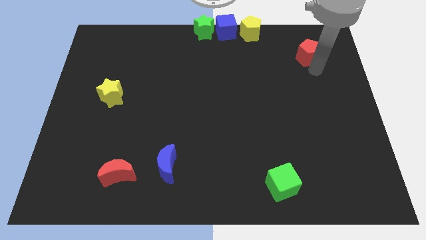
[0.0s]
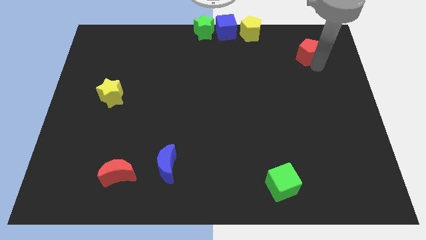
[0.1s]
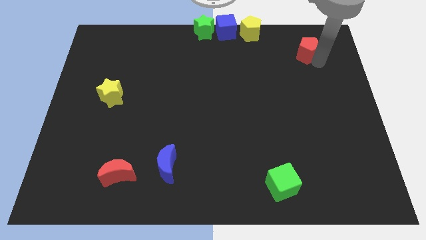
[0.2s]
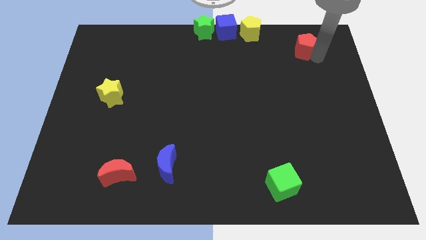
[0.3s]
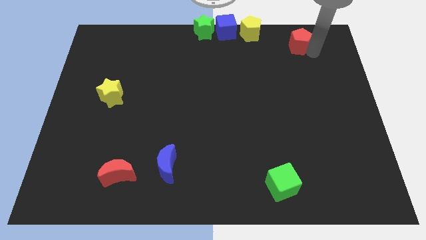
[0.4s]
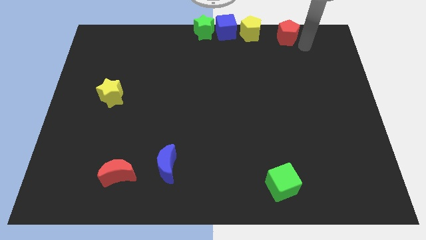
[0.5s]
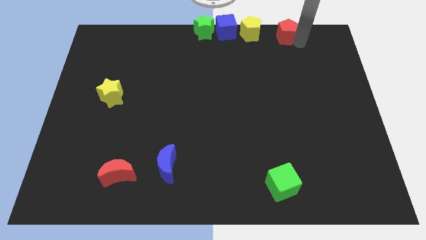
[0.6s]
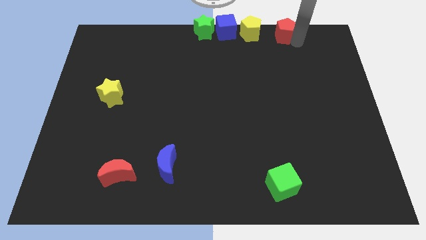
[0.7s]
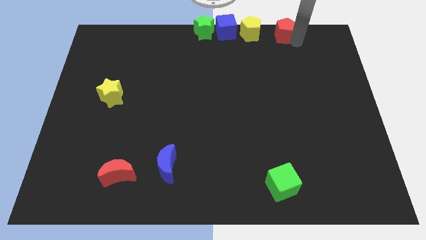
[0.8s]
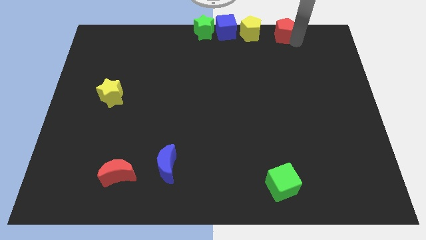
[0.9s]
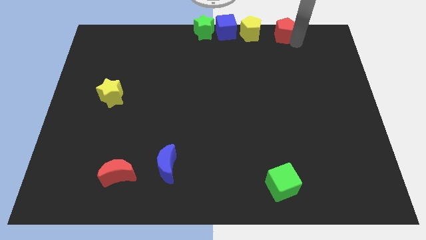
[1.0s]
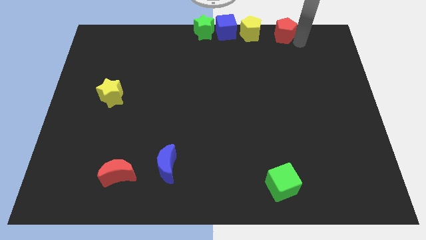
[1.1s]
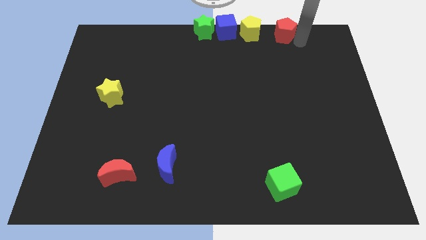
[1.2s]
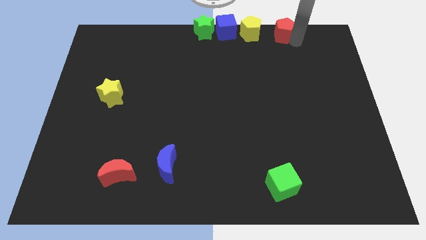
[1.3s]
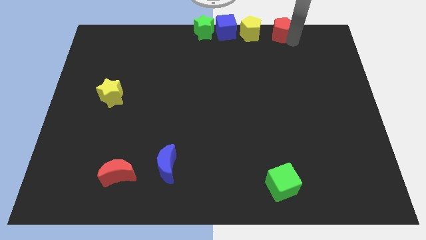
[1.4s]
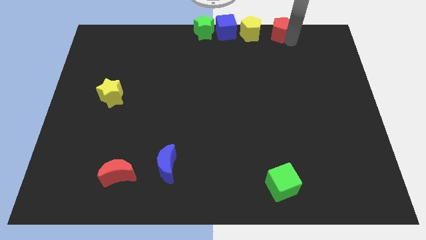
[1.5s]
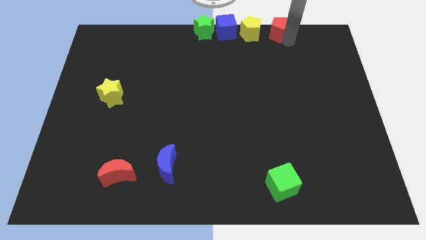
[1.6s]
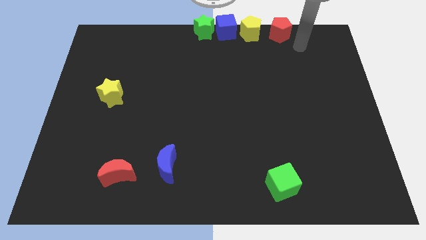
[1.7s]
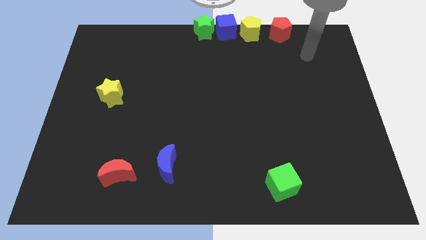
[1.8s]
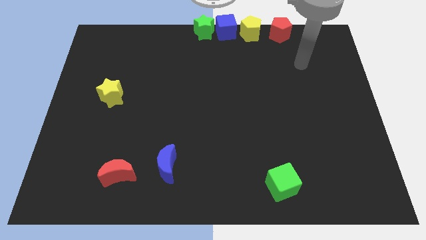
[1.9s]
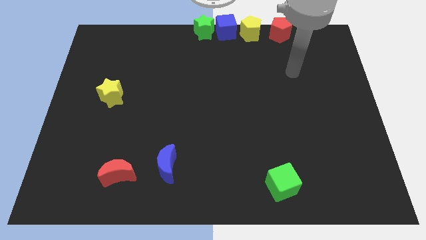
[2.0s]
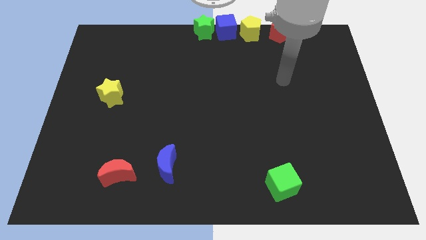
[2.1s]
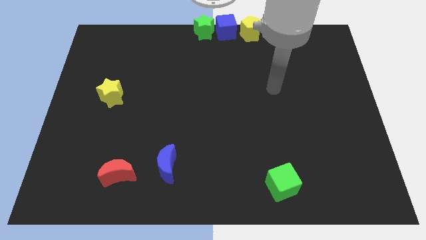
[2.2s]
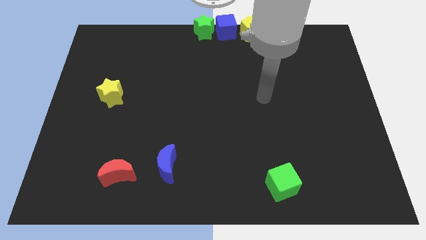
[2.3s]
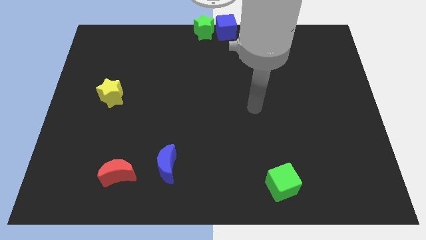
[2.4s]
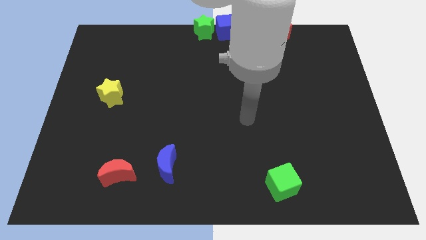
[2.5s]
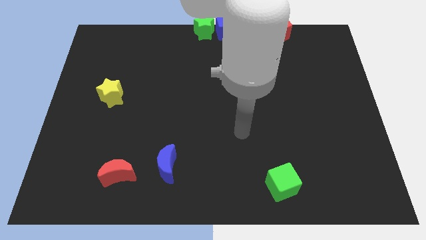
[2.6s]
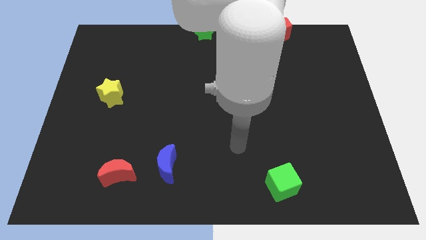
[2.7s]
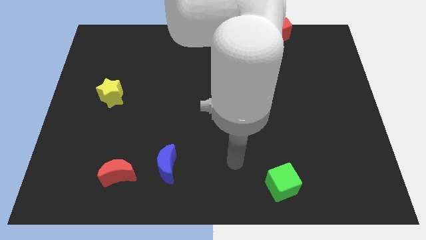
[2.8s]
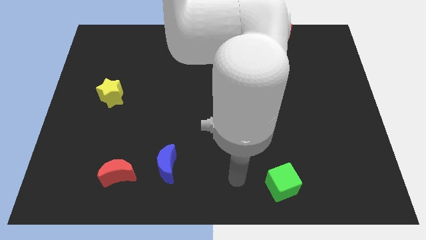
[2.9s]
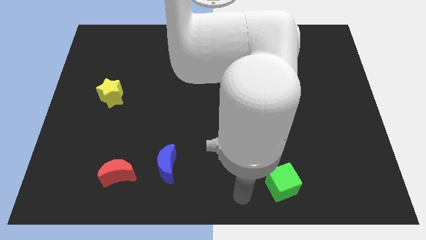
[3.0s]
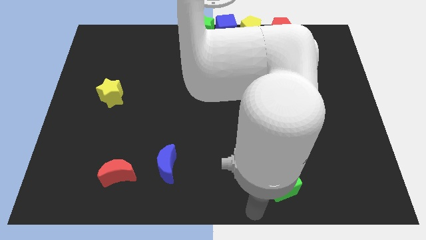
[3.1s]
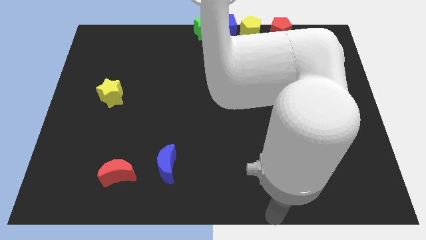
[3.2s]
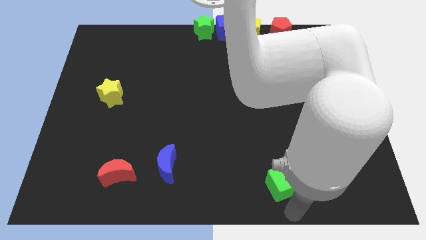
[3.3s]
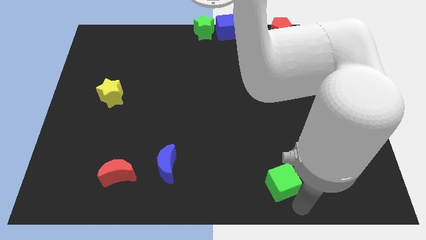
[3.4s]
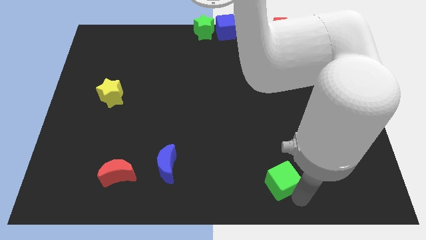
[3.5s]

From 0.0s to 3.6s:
tap the green cube

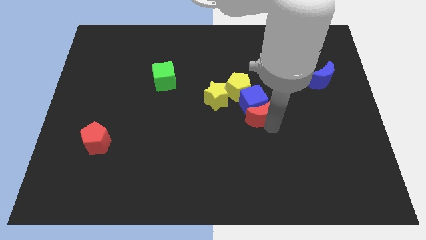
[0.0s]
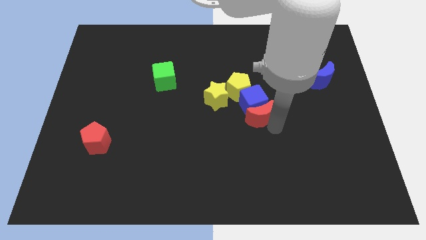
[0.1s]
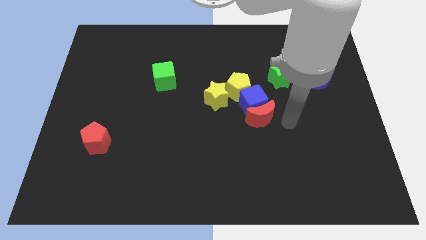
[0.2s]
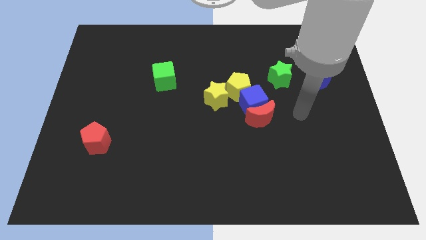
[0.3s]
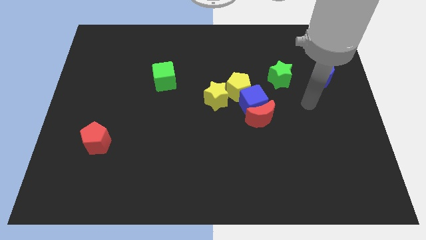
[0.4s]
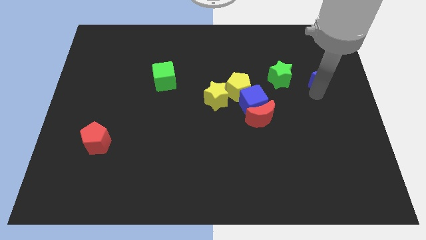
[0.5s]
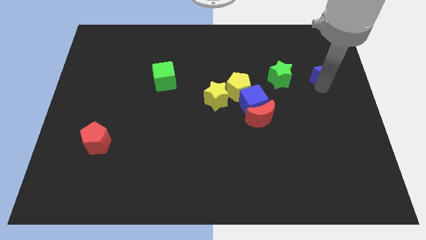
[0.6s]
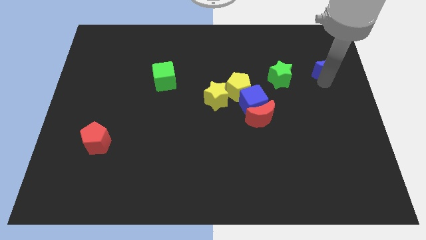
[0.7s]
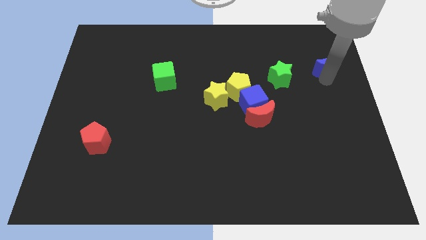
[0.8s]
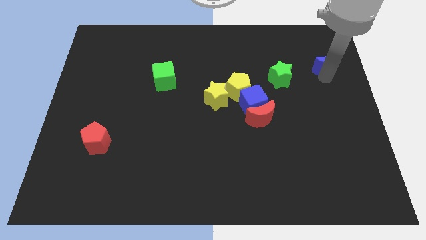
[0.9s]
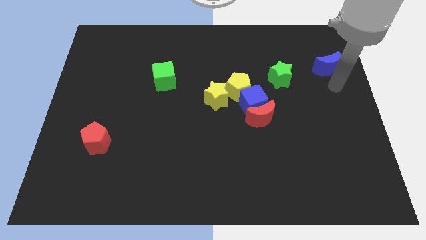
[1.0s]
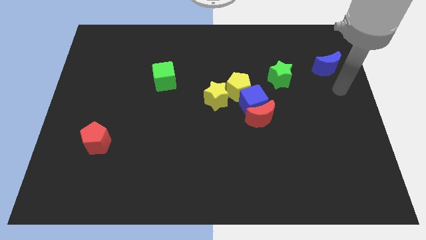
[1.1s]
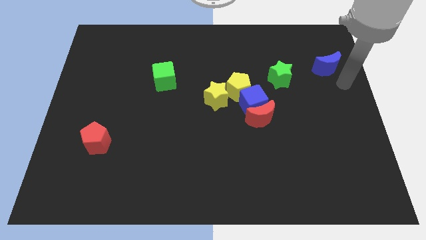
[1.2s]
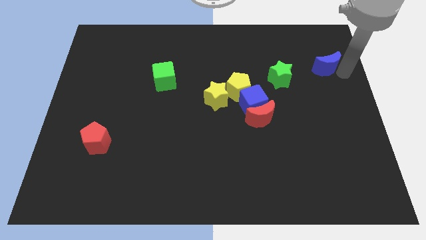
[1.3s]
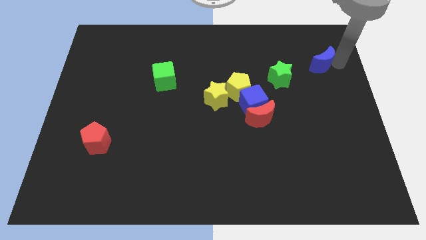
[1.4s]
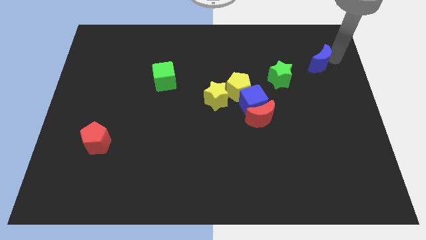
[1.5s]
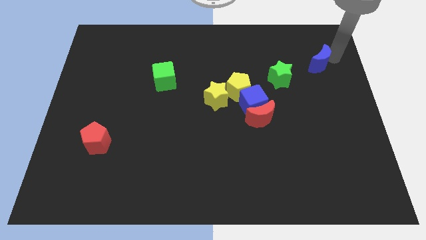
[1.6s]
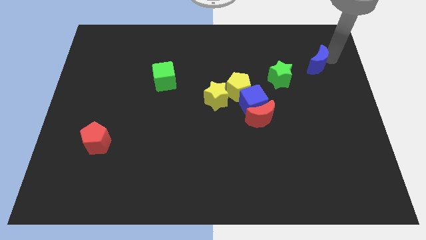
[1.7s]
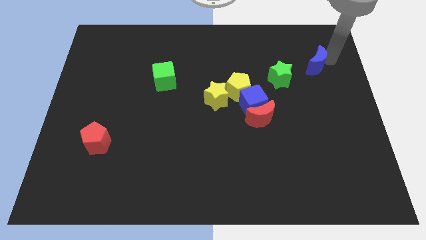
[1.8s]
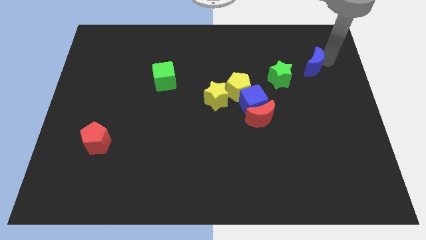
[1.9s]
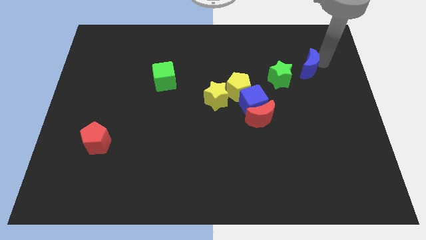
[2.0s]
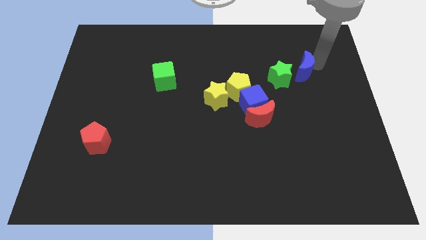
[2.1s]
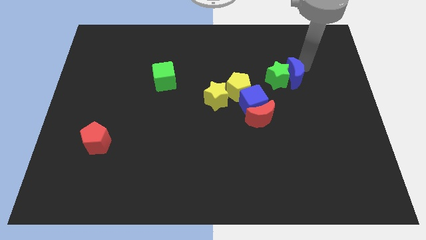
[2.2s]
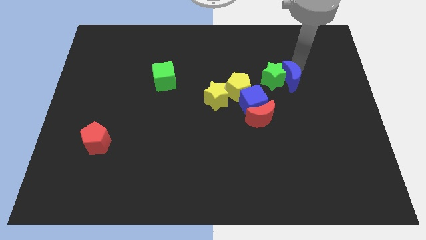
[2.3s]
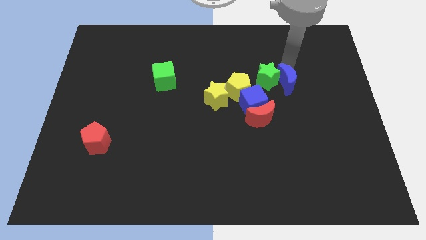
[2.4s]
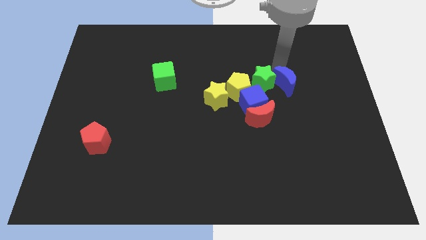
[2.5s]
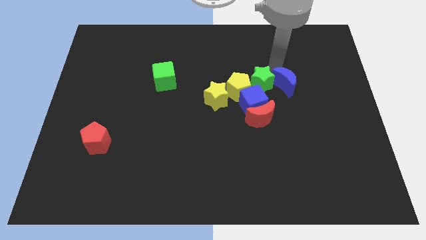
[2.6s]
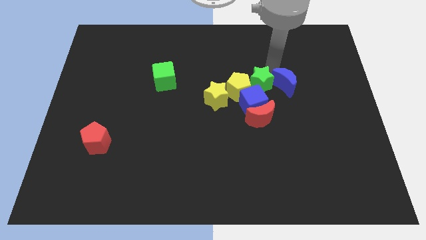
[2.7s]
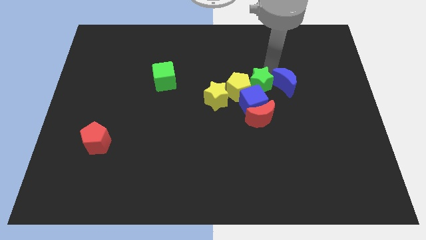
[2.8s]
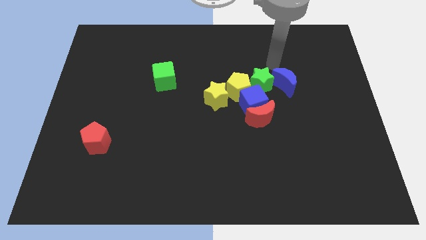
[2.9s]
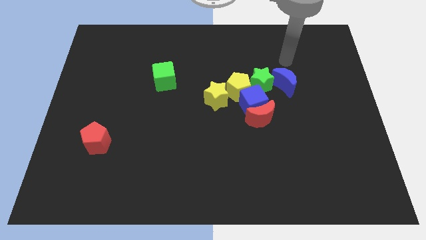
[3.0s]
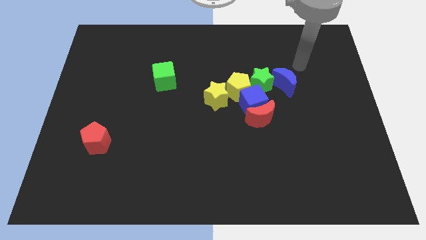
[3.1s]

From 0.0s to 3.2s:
place the blue crescent right side of the green star

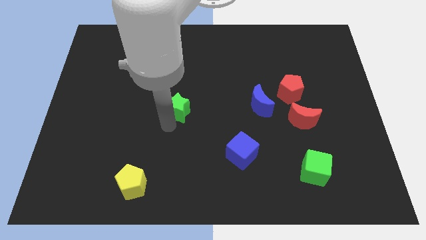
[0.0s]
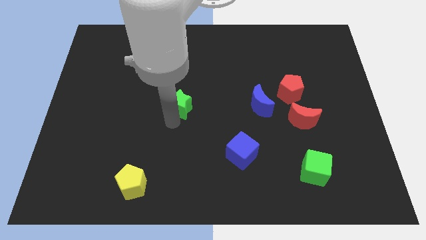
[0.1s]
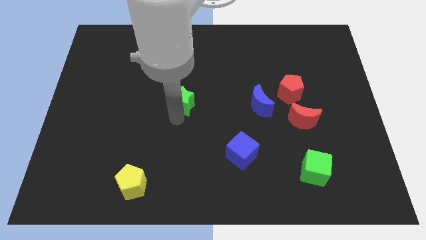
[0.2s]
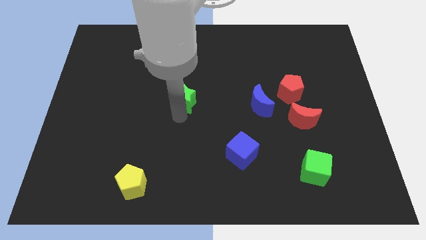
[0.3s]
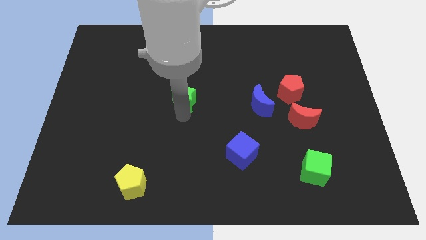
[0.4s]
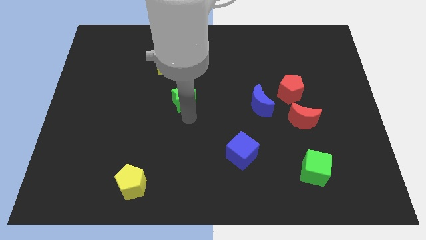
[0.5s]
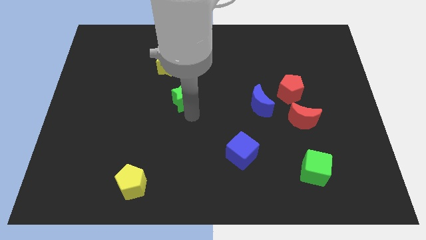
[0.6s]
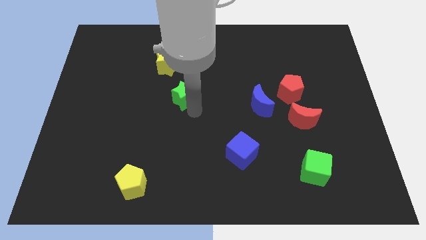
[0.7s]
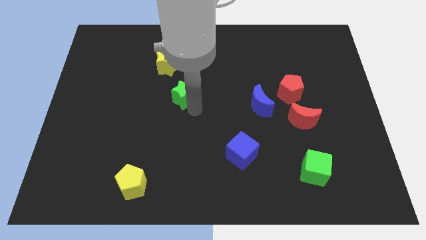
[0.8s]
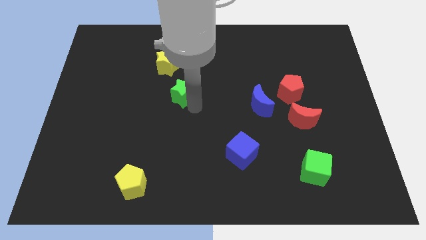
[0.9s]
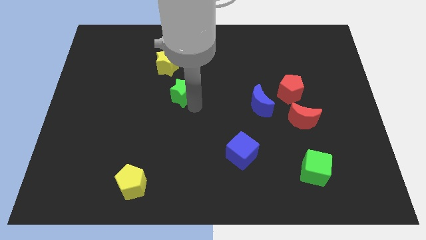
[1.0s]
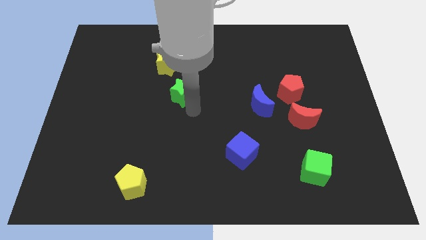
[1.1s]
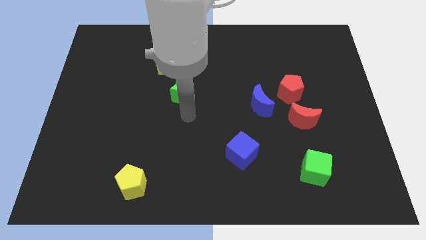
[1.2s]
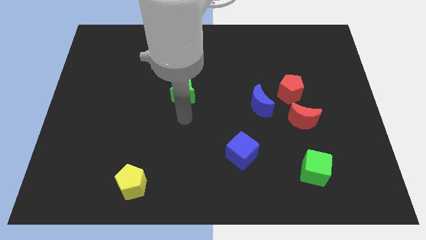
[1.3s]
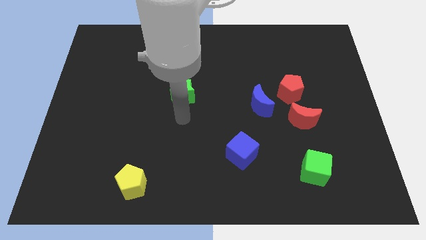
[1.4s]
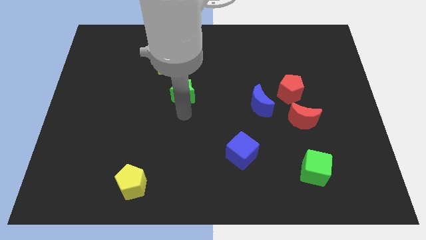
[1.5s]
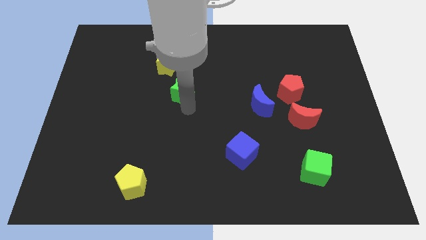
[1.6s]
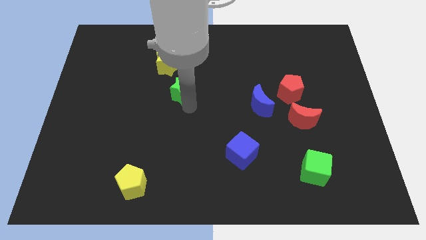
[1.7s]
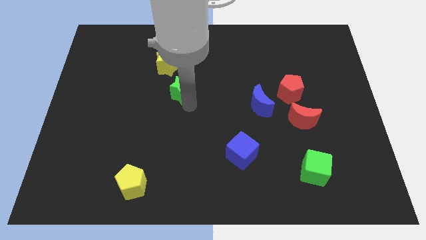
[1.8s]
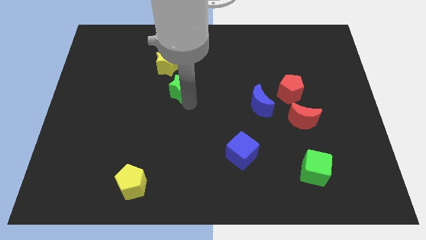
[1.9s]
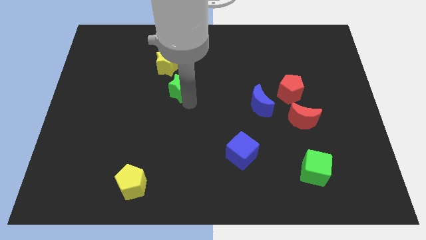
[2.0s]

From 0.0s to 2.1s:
move the green star below the yellow star
